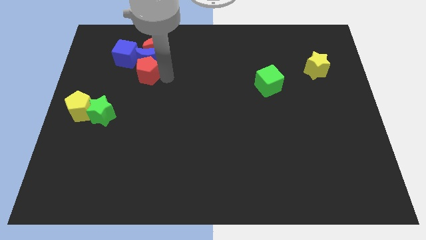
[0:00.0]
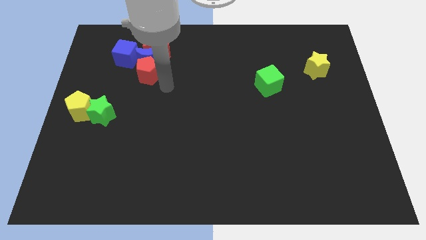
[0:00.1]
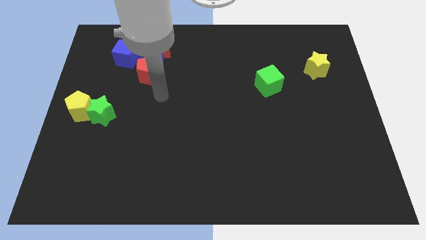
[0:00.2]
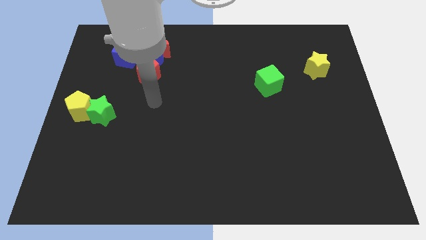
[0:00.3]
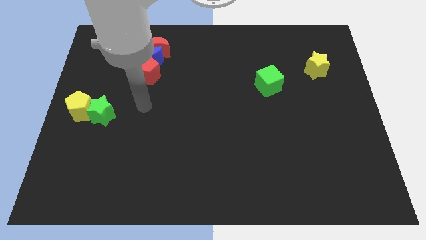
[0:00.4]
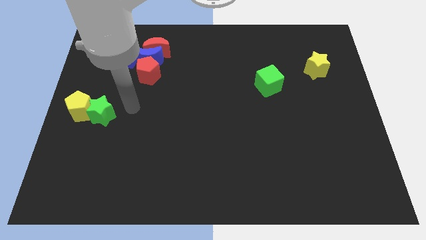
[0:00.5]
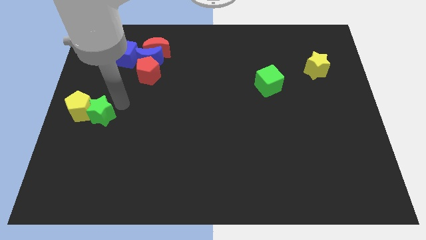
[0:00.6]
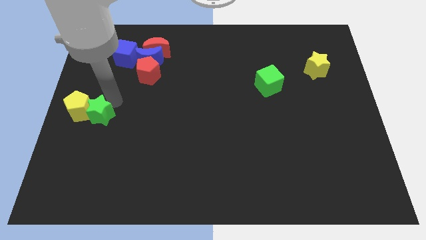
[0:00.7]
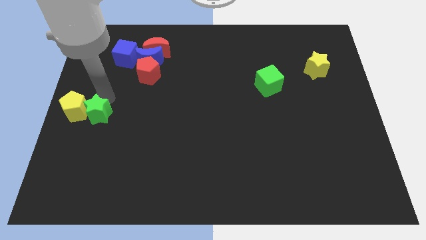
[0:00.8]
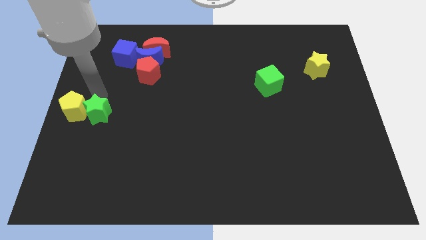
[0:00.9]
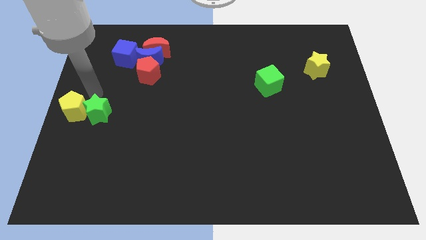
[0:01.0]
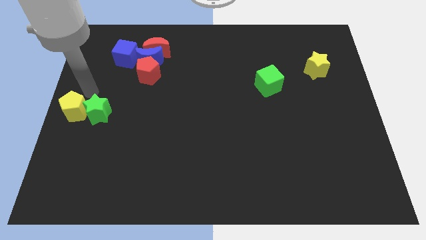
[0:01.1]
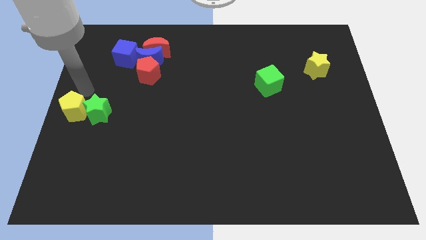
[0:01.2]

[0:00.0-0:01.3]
move your arm away from the red pentagon

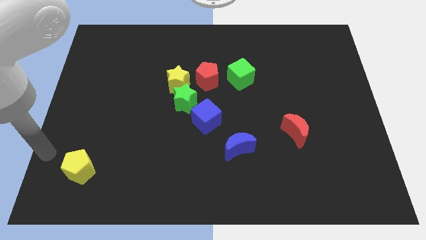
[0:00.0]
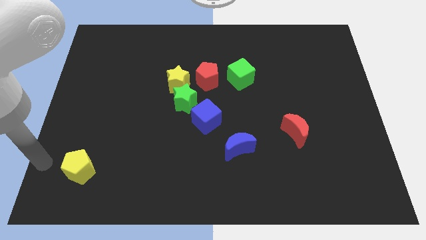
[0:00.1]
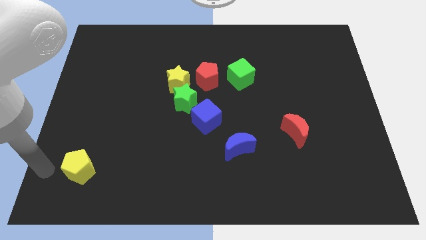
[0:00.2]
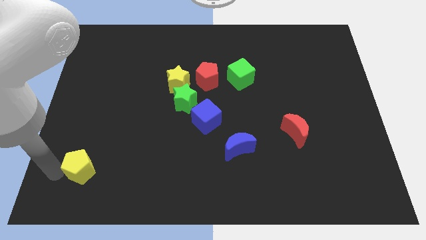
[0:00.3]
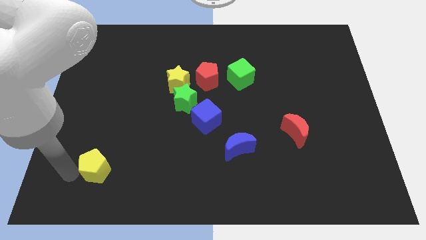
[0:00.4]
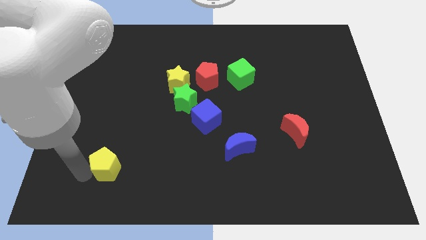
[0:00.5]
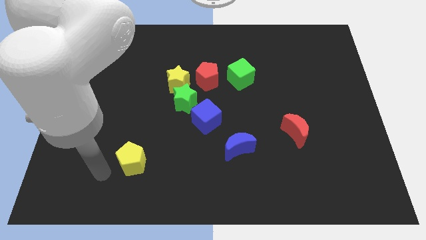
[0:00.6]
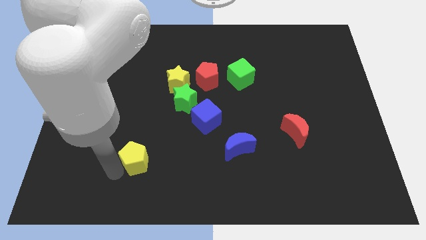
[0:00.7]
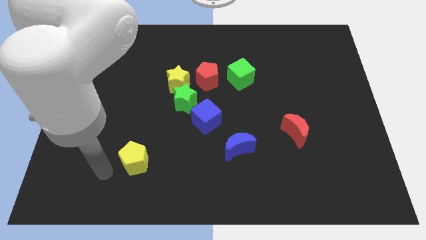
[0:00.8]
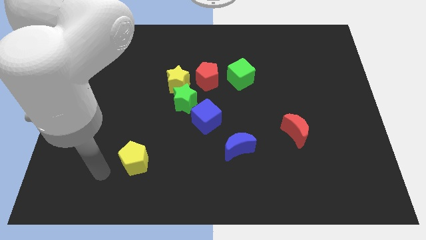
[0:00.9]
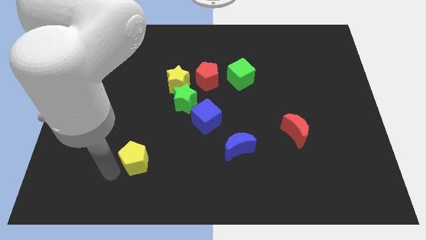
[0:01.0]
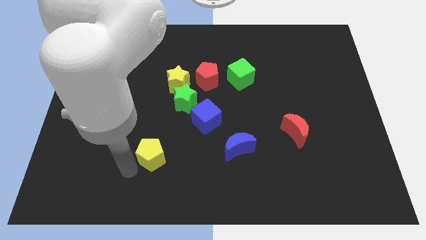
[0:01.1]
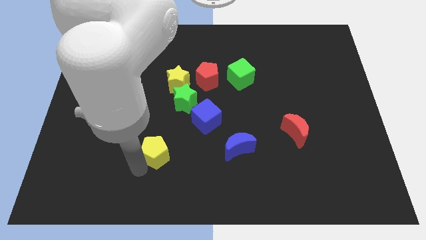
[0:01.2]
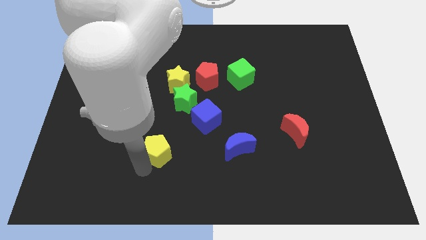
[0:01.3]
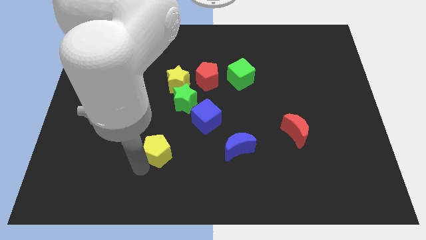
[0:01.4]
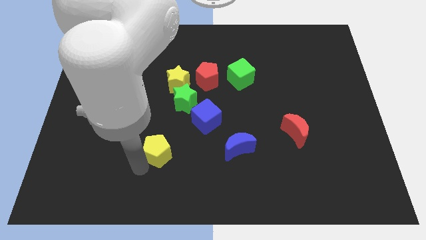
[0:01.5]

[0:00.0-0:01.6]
move the yellow pentagon to the bottom center

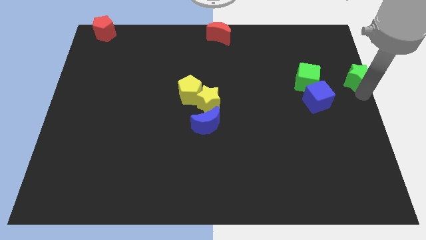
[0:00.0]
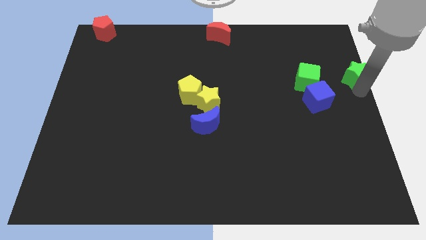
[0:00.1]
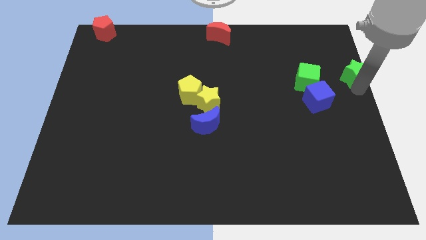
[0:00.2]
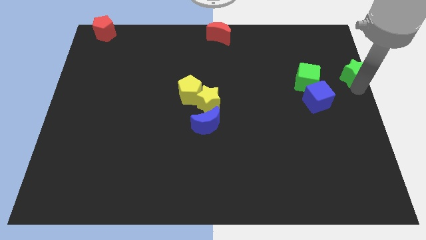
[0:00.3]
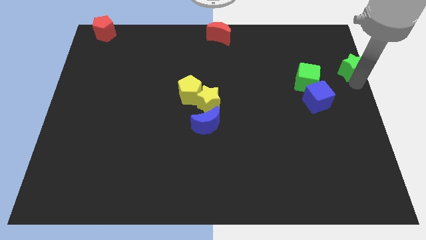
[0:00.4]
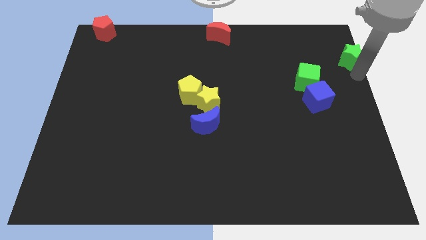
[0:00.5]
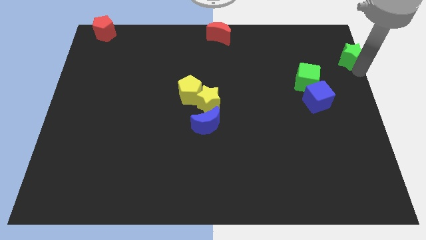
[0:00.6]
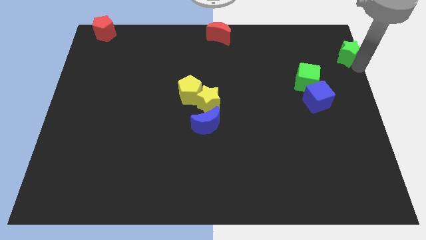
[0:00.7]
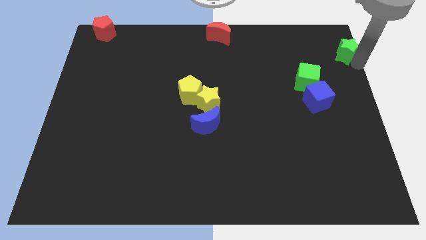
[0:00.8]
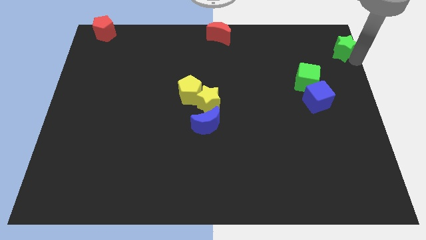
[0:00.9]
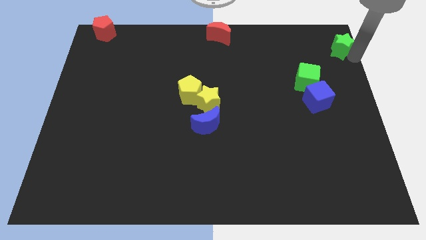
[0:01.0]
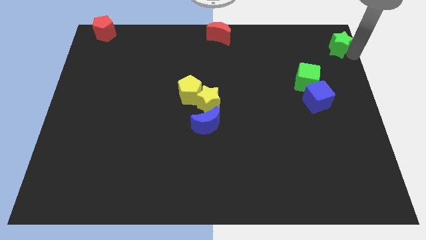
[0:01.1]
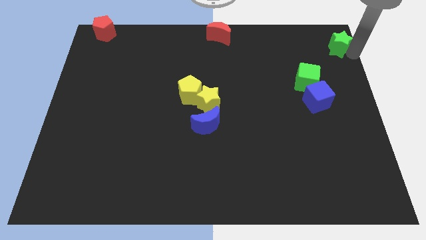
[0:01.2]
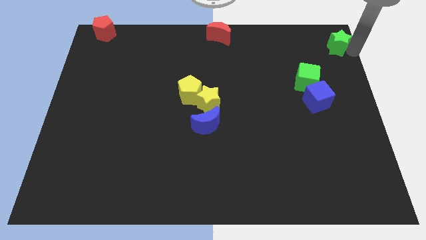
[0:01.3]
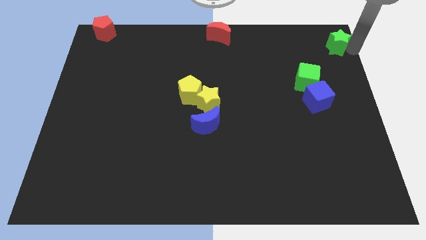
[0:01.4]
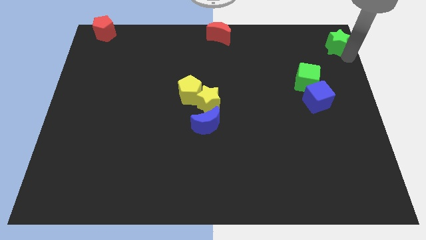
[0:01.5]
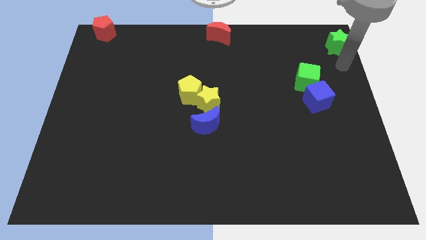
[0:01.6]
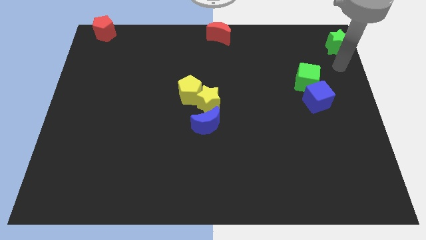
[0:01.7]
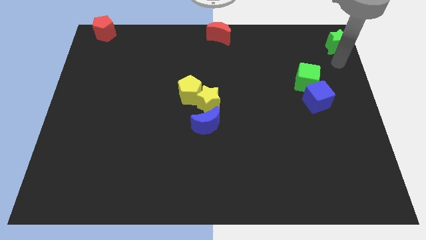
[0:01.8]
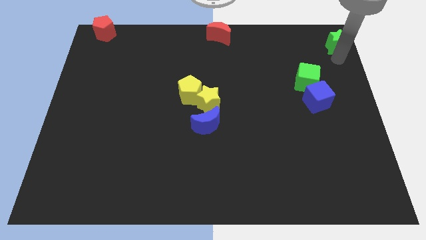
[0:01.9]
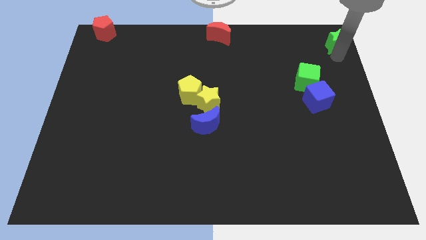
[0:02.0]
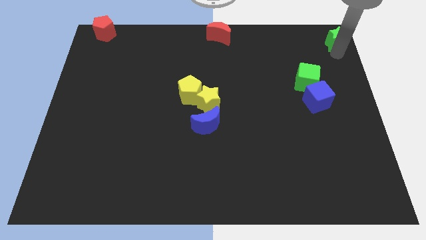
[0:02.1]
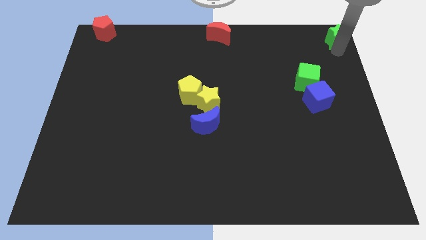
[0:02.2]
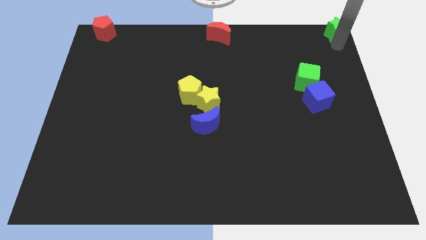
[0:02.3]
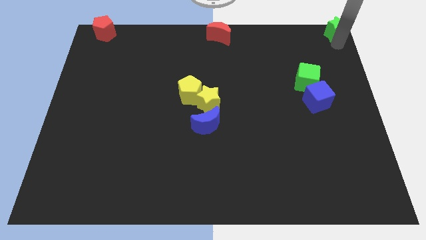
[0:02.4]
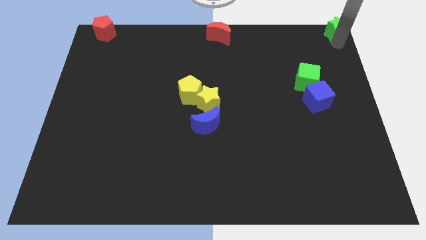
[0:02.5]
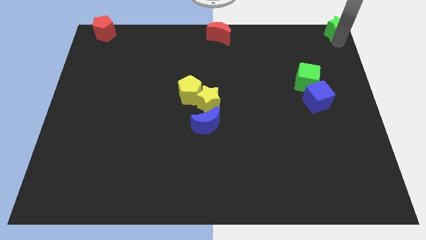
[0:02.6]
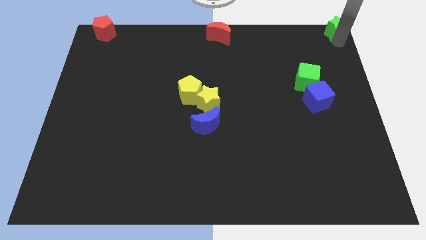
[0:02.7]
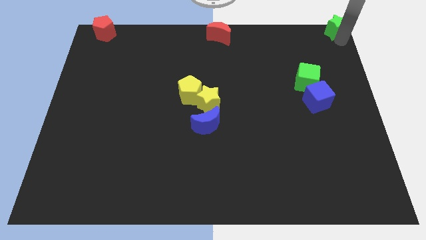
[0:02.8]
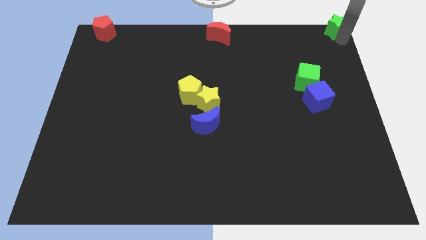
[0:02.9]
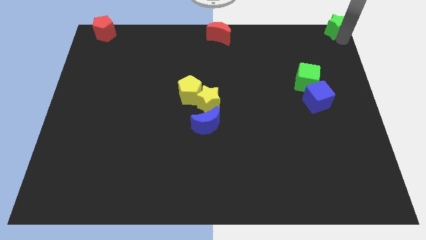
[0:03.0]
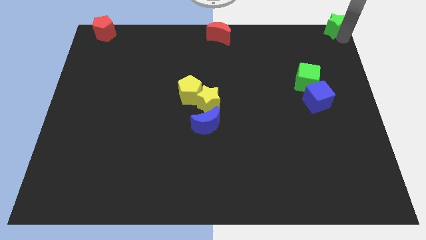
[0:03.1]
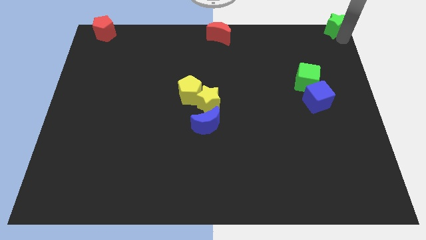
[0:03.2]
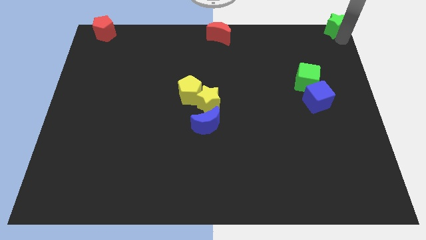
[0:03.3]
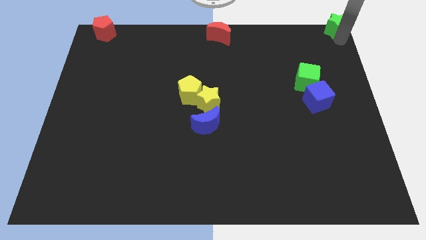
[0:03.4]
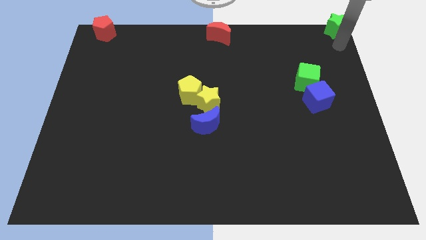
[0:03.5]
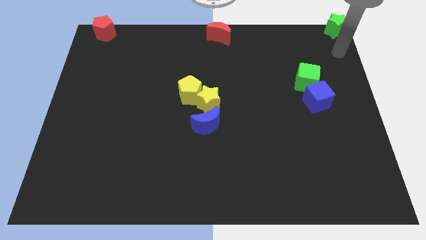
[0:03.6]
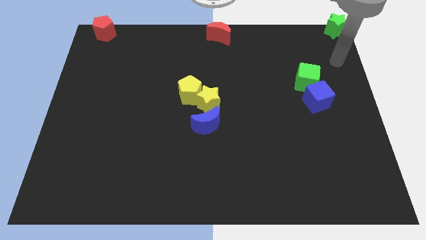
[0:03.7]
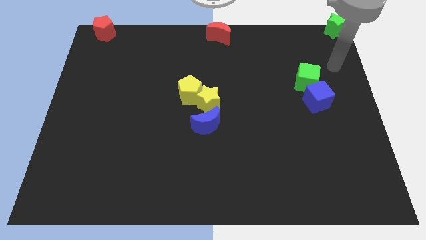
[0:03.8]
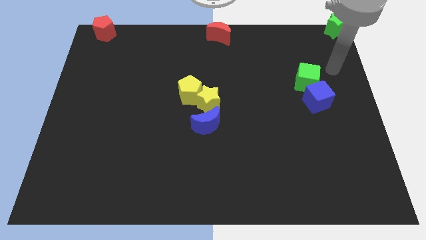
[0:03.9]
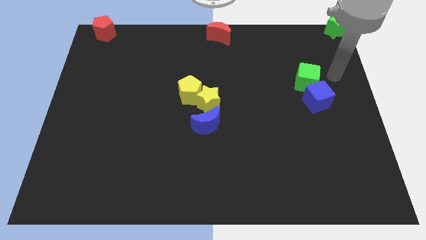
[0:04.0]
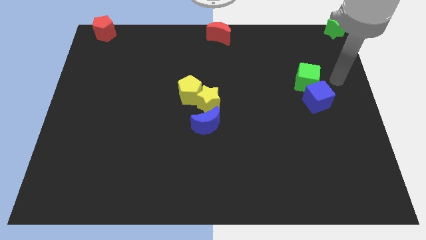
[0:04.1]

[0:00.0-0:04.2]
place the green star diagonally top right to the green cube

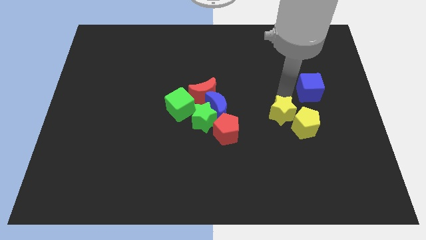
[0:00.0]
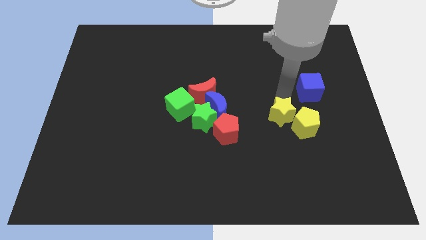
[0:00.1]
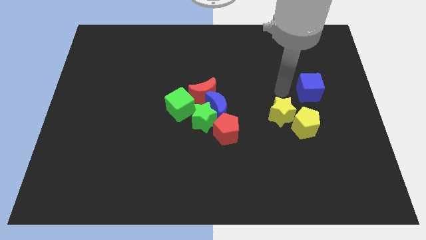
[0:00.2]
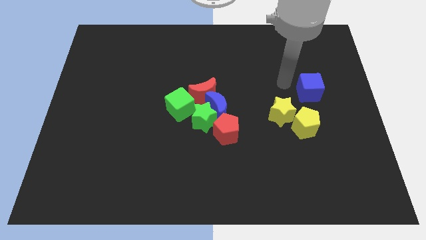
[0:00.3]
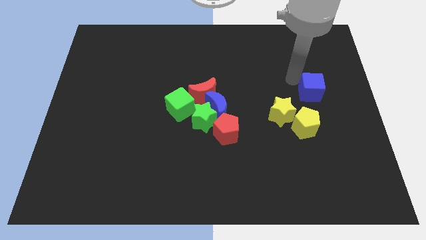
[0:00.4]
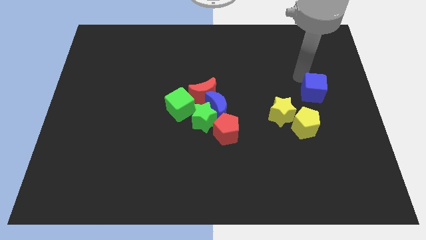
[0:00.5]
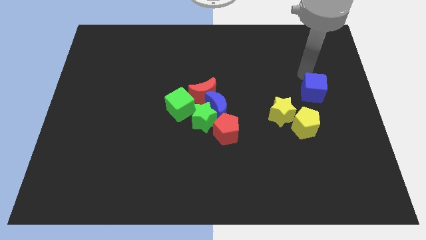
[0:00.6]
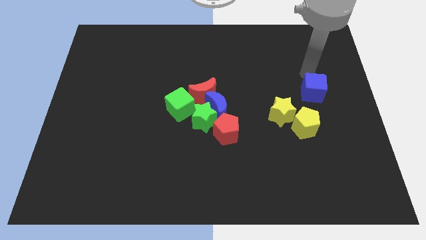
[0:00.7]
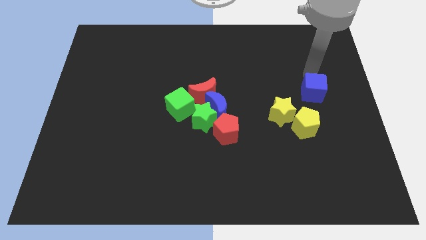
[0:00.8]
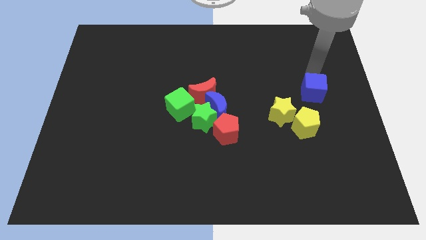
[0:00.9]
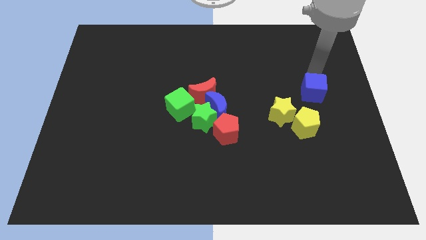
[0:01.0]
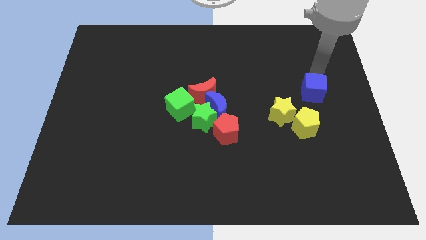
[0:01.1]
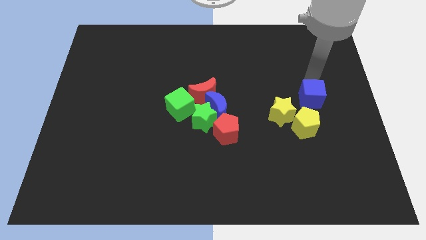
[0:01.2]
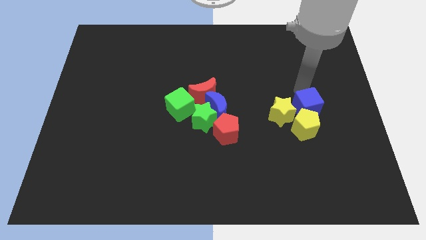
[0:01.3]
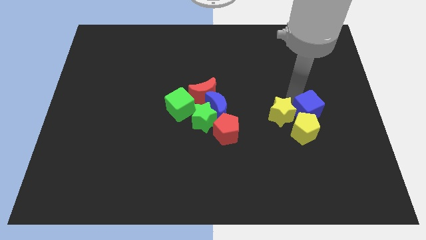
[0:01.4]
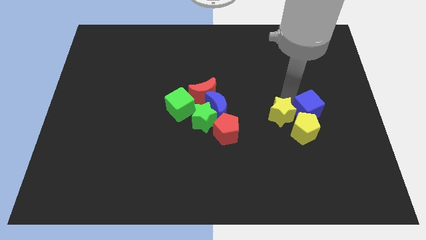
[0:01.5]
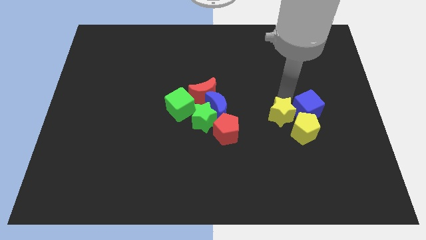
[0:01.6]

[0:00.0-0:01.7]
place the blue cube on the top of the yellow pentagon

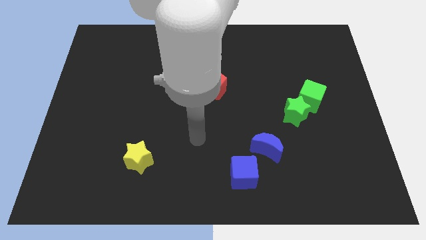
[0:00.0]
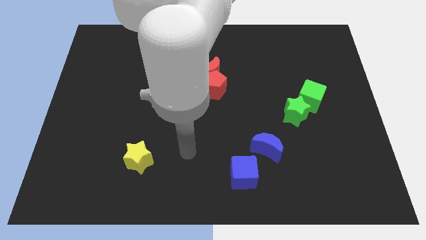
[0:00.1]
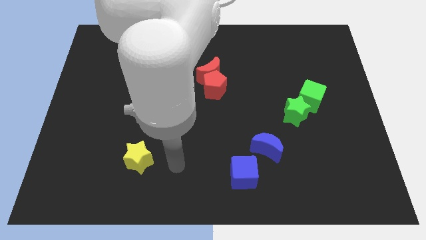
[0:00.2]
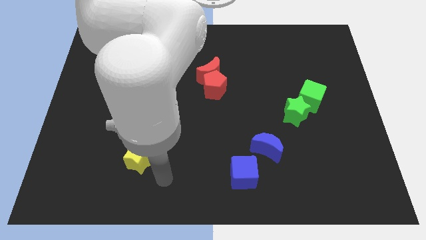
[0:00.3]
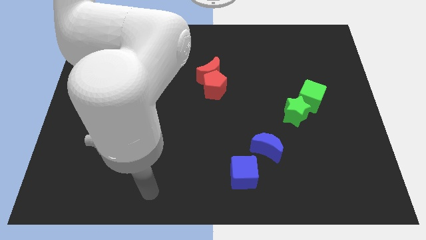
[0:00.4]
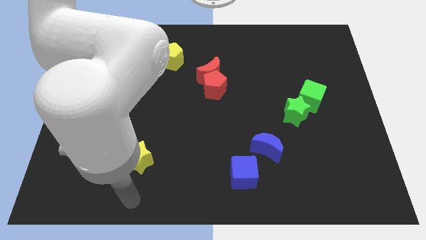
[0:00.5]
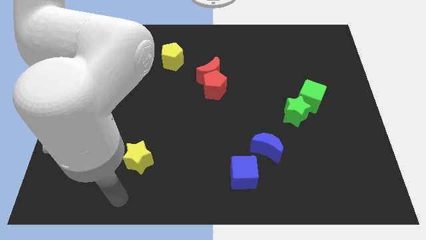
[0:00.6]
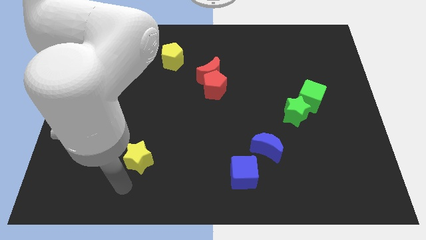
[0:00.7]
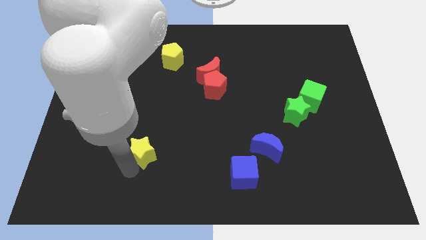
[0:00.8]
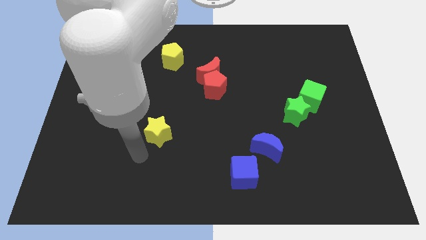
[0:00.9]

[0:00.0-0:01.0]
touch the bottom of yellow star
